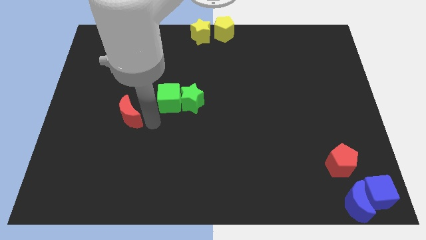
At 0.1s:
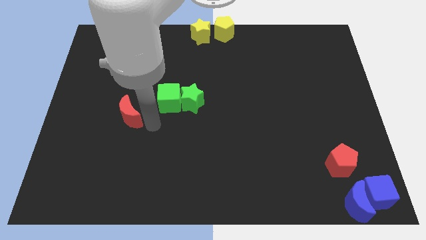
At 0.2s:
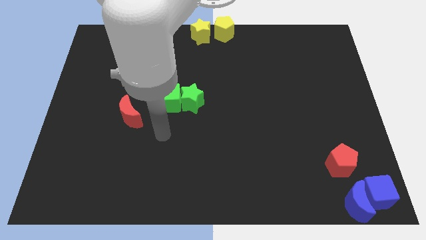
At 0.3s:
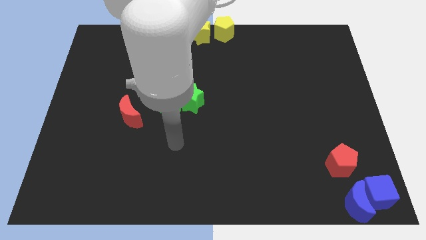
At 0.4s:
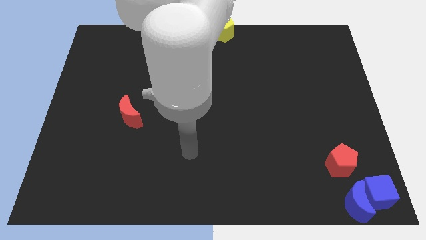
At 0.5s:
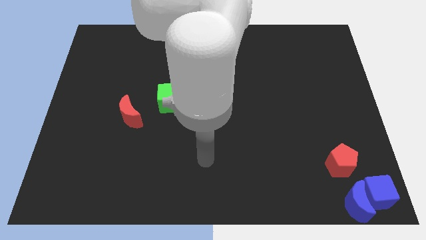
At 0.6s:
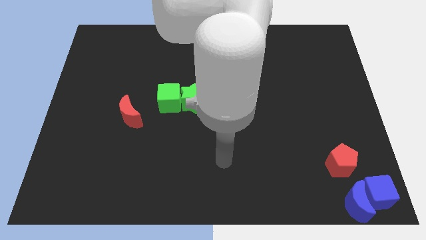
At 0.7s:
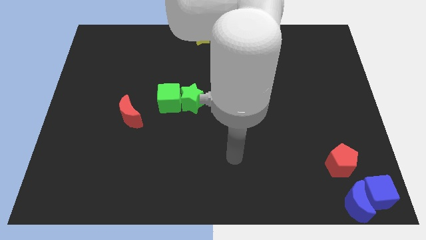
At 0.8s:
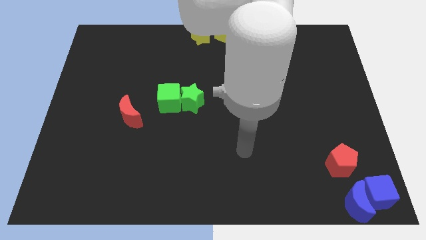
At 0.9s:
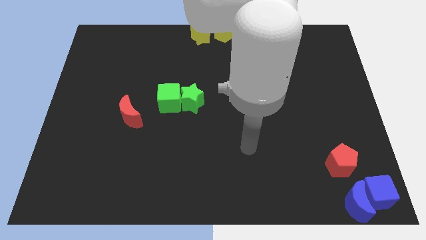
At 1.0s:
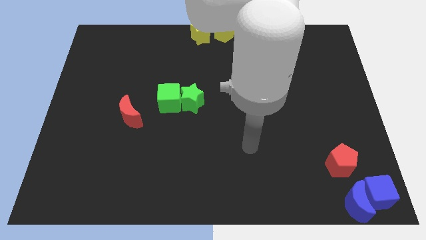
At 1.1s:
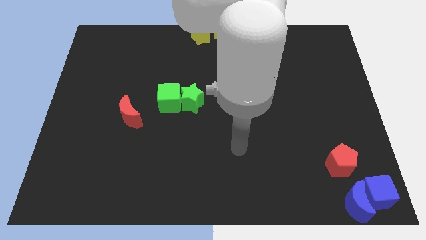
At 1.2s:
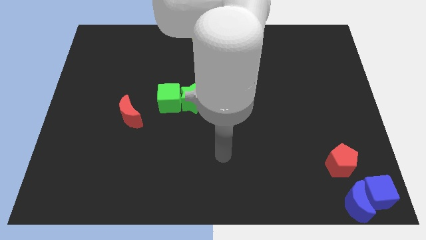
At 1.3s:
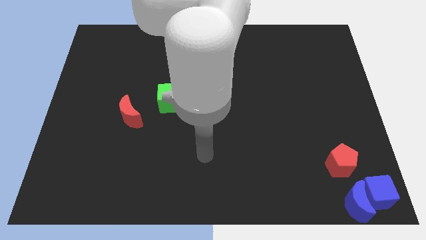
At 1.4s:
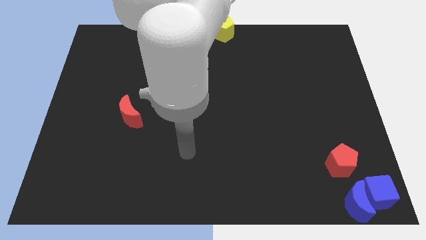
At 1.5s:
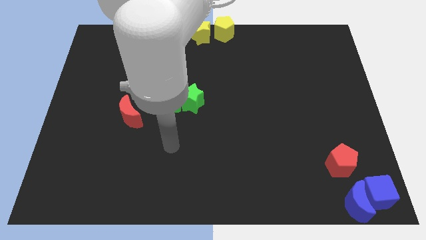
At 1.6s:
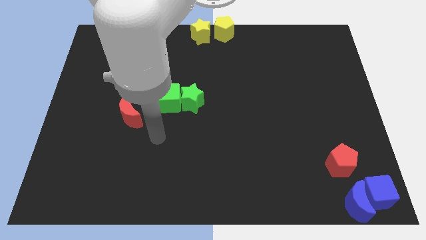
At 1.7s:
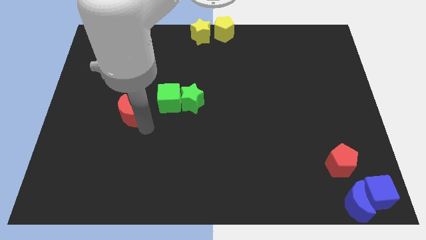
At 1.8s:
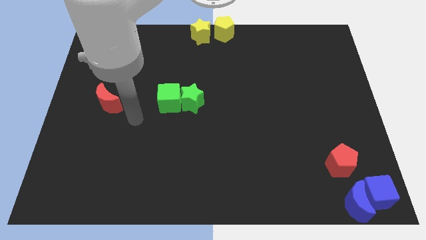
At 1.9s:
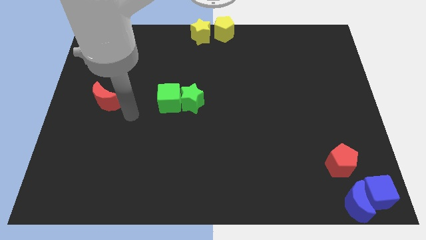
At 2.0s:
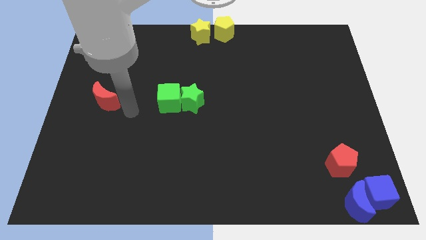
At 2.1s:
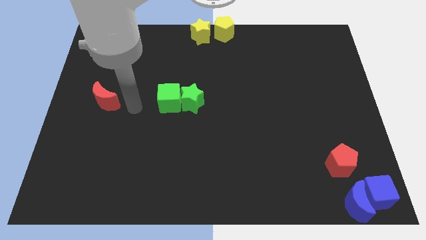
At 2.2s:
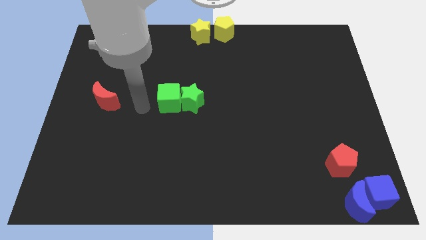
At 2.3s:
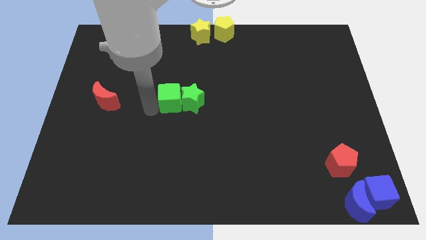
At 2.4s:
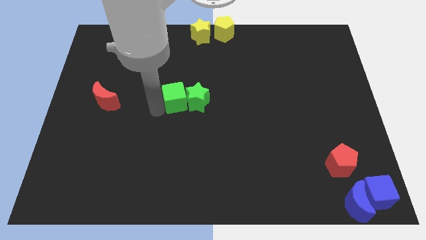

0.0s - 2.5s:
push the red moon towards the left center of the board

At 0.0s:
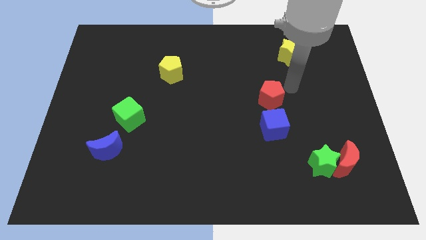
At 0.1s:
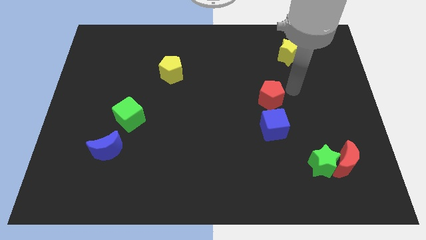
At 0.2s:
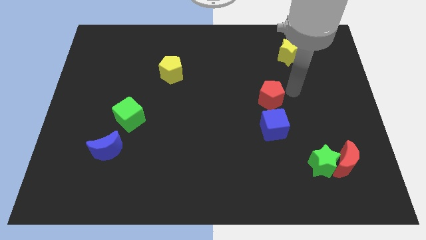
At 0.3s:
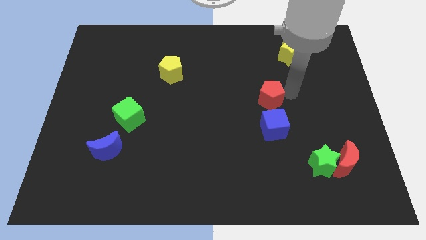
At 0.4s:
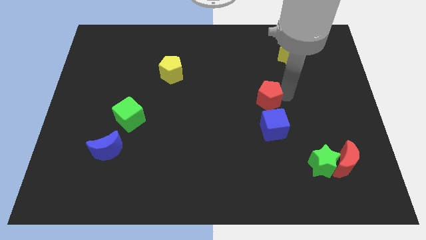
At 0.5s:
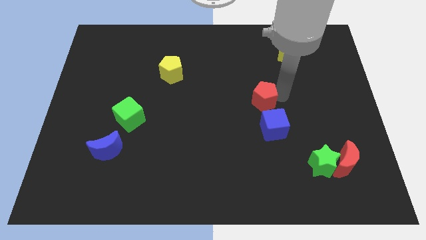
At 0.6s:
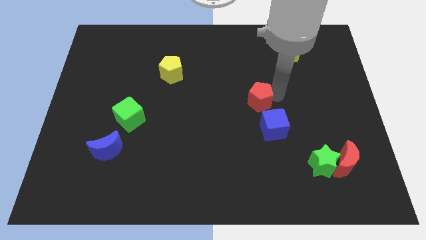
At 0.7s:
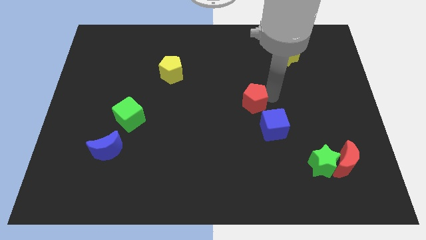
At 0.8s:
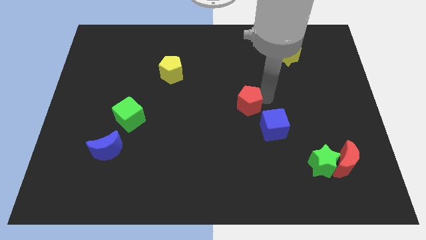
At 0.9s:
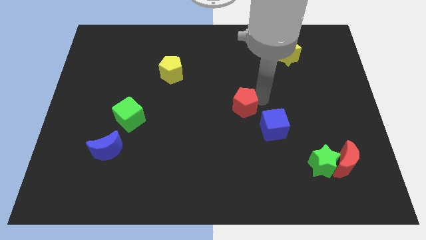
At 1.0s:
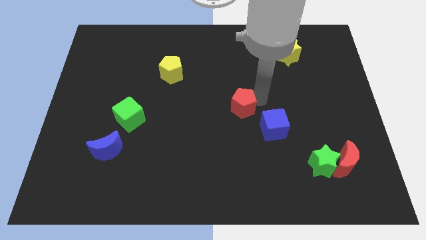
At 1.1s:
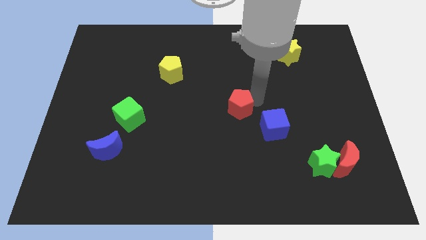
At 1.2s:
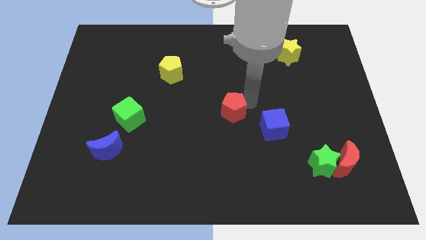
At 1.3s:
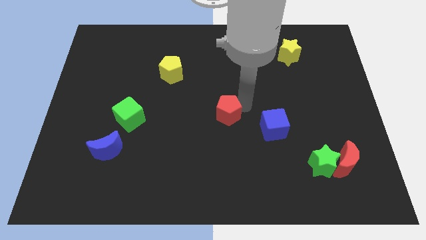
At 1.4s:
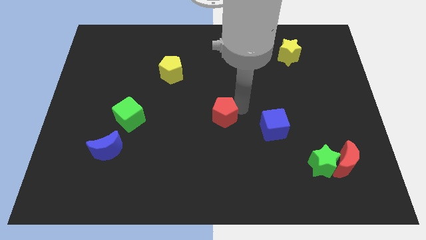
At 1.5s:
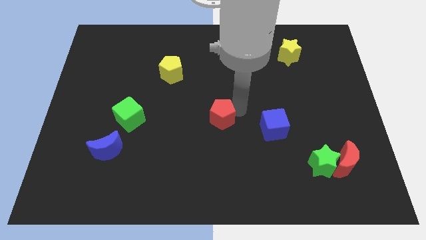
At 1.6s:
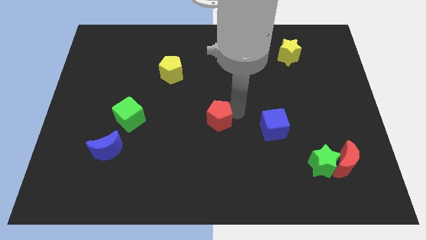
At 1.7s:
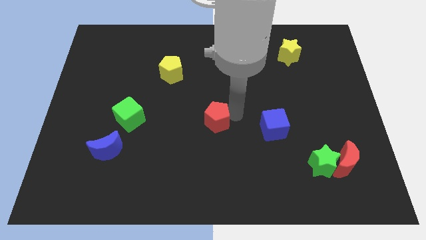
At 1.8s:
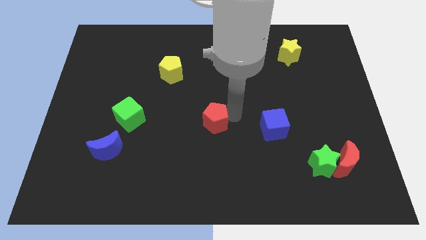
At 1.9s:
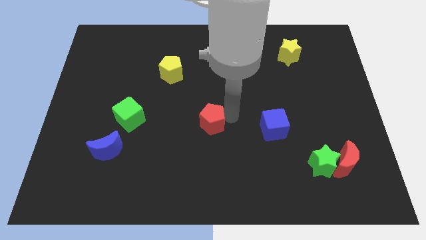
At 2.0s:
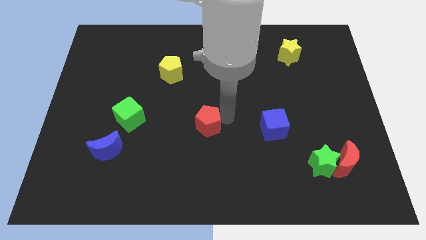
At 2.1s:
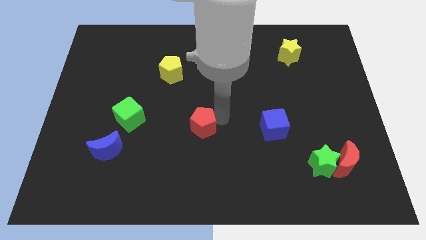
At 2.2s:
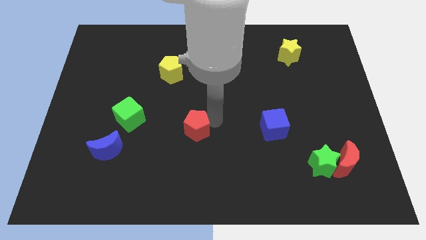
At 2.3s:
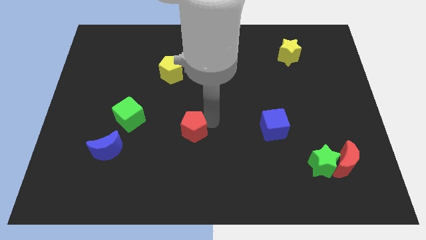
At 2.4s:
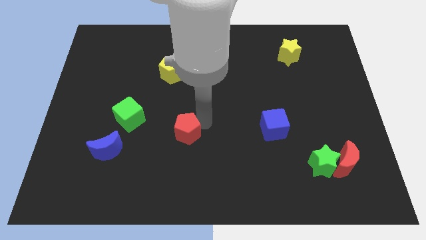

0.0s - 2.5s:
place red pentagon in between green cube and blue cube

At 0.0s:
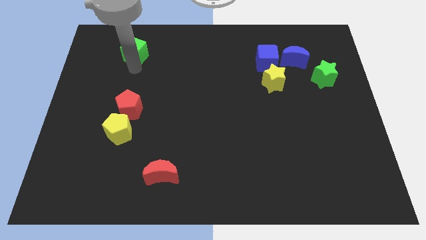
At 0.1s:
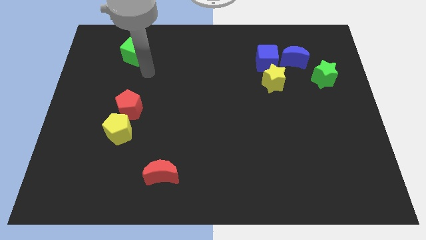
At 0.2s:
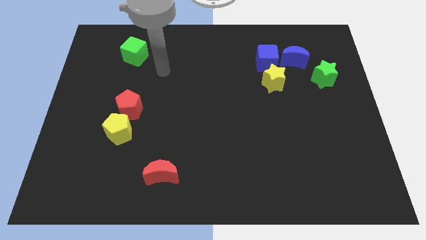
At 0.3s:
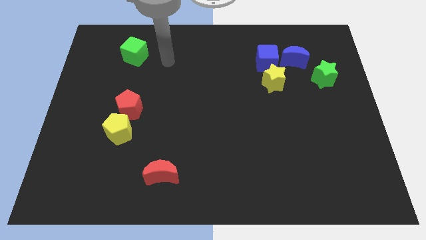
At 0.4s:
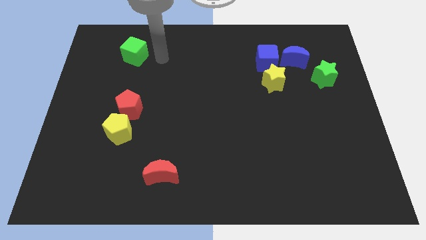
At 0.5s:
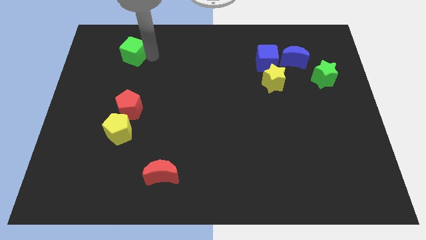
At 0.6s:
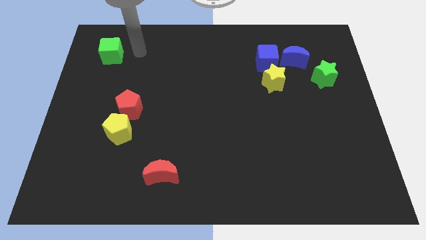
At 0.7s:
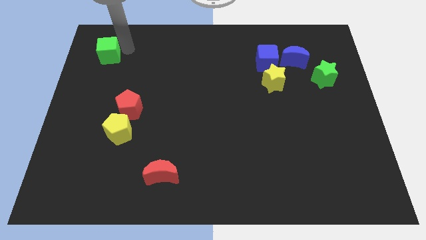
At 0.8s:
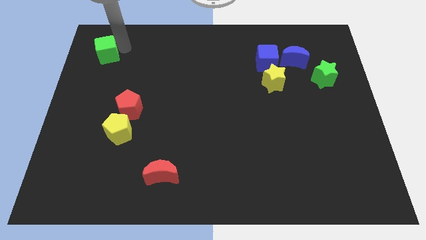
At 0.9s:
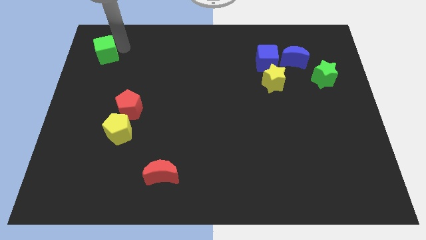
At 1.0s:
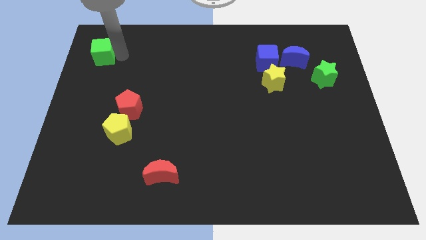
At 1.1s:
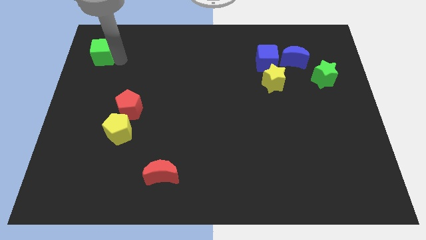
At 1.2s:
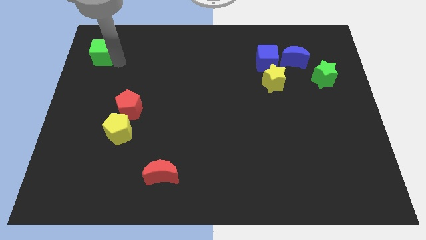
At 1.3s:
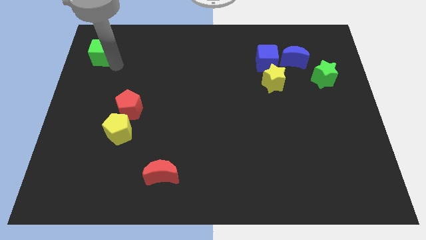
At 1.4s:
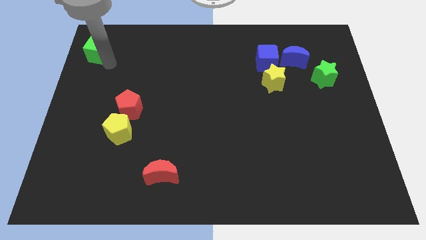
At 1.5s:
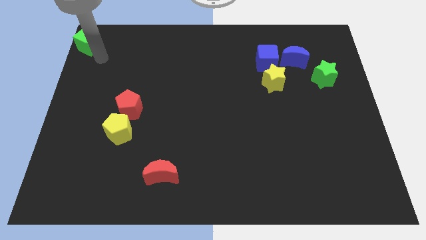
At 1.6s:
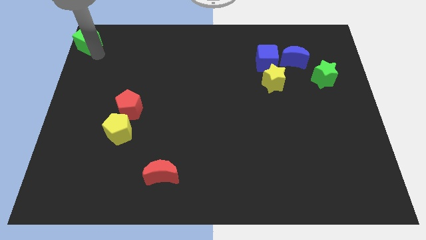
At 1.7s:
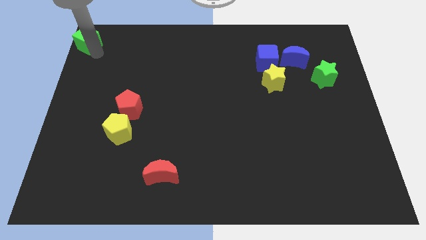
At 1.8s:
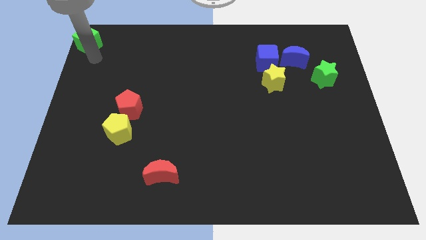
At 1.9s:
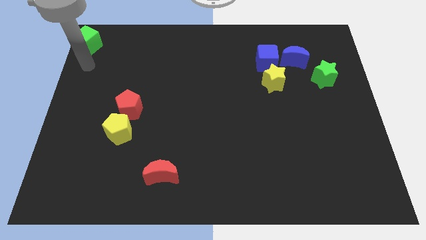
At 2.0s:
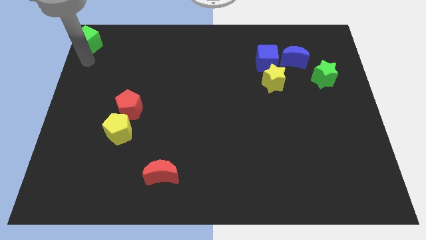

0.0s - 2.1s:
push the green cube towards the top left corner of the board

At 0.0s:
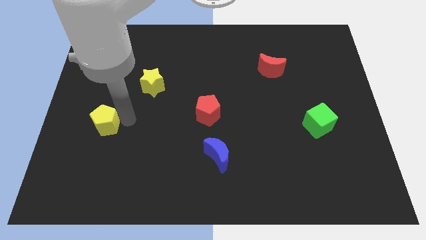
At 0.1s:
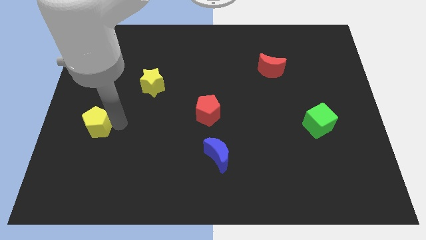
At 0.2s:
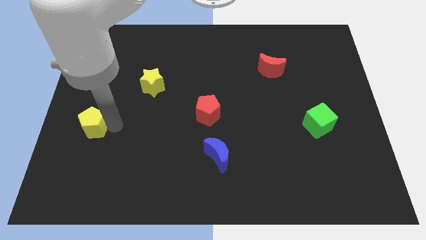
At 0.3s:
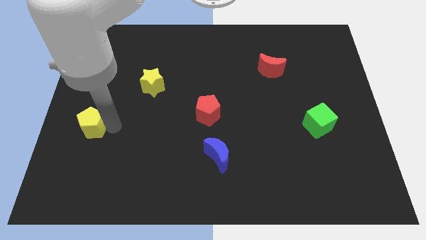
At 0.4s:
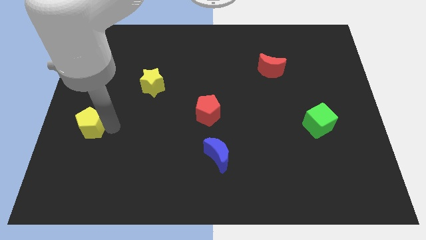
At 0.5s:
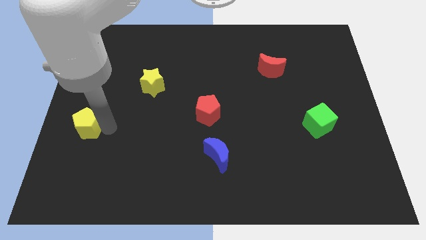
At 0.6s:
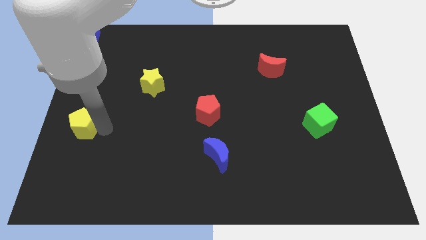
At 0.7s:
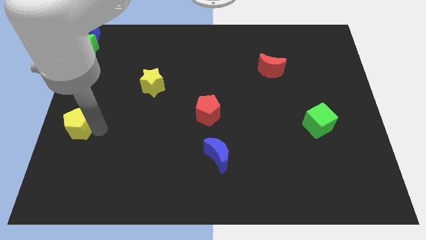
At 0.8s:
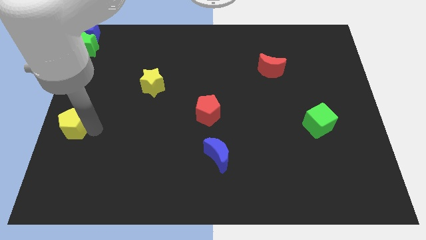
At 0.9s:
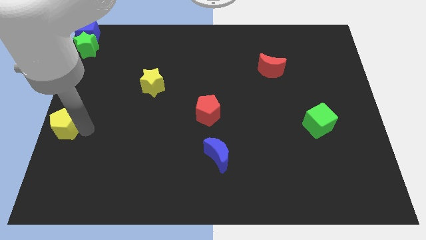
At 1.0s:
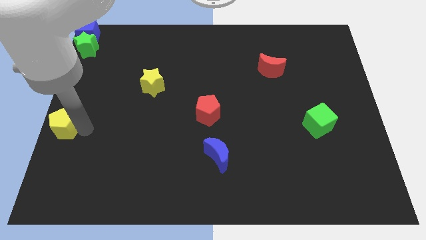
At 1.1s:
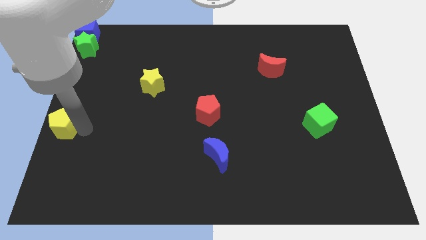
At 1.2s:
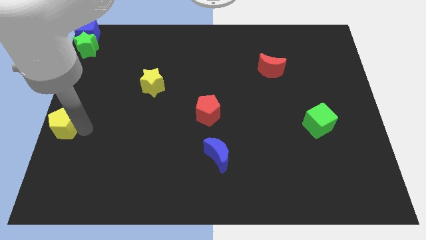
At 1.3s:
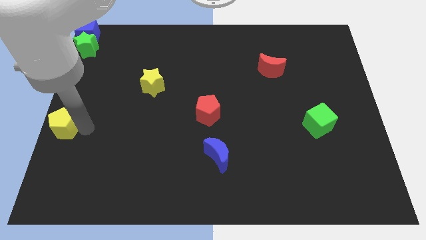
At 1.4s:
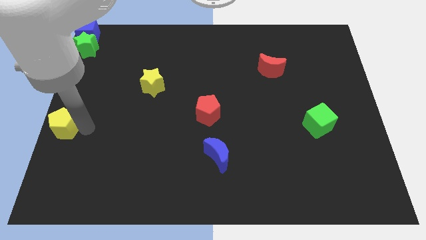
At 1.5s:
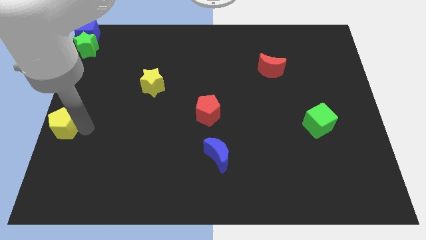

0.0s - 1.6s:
push the yellow pentagon to the left side of the board

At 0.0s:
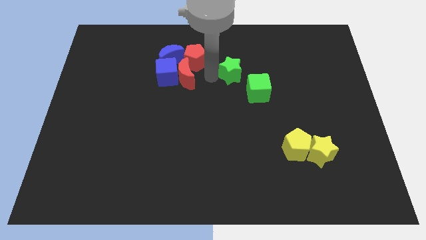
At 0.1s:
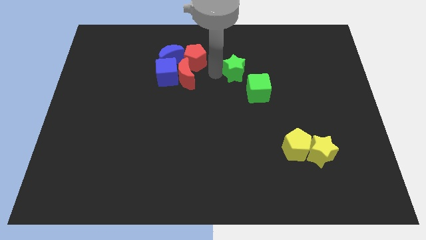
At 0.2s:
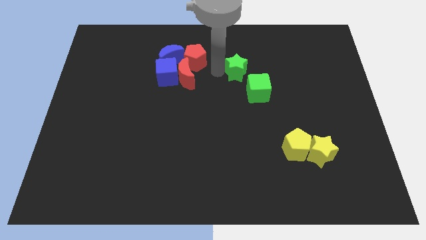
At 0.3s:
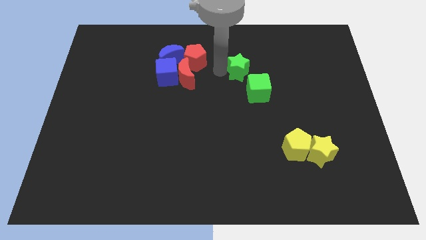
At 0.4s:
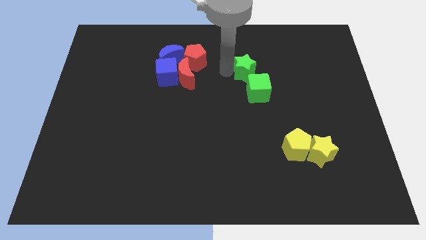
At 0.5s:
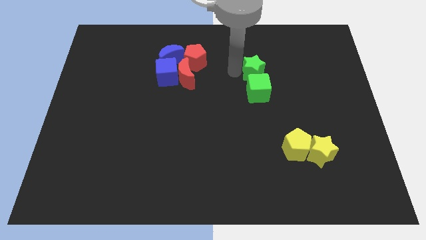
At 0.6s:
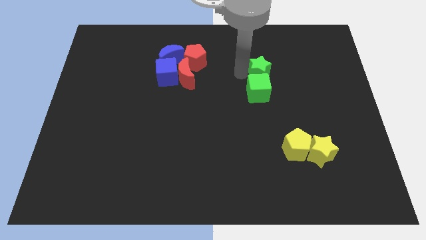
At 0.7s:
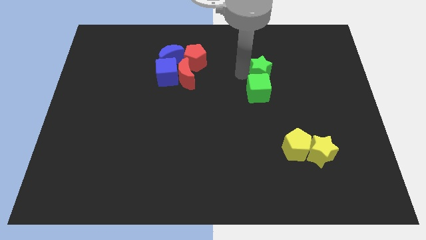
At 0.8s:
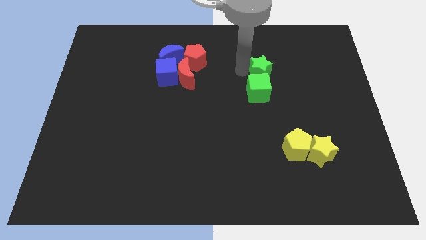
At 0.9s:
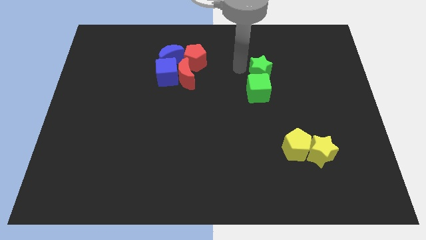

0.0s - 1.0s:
move the green star above the green cube
